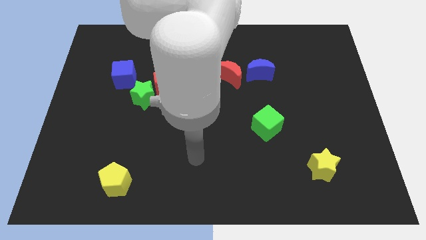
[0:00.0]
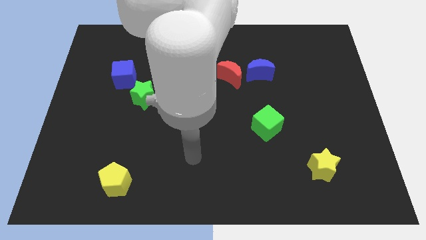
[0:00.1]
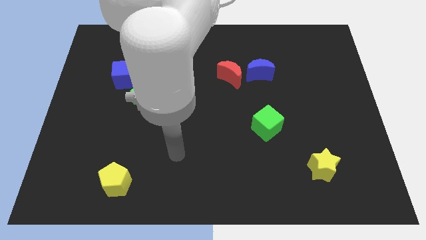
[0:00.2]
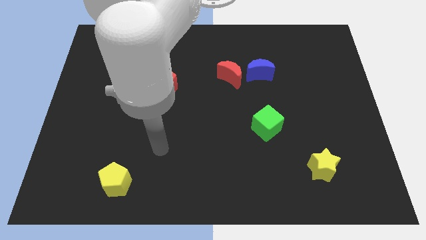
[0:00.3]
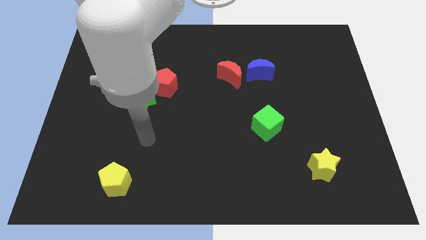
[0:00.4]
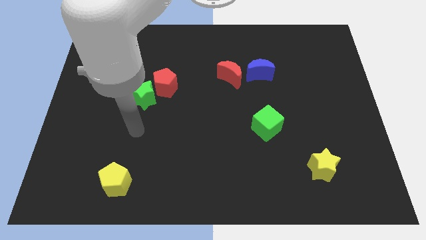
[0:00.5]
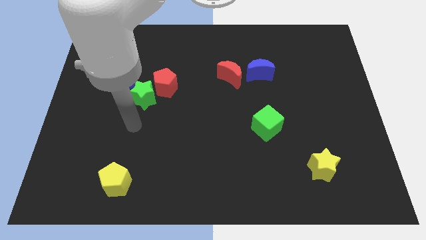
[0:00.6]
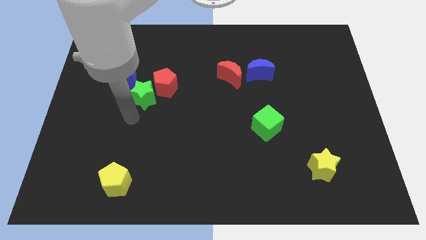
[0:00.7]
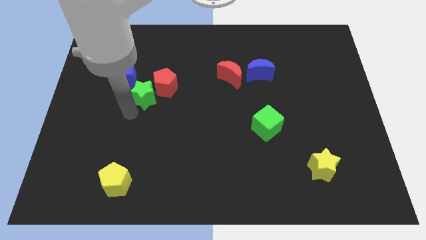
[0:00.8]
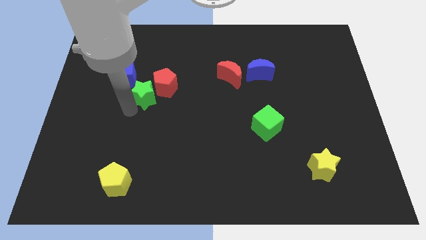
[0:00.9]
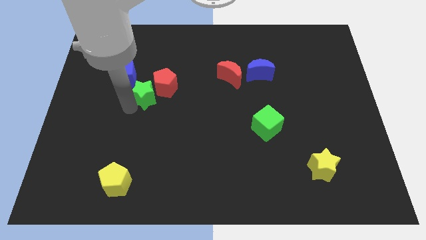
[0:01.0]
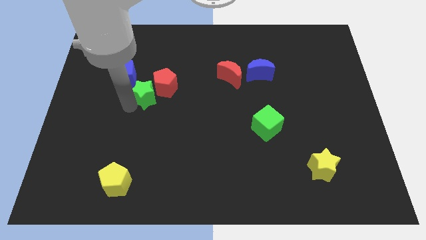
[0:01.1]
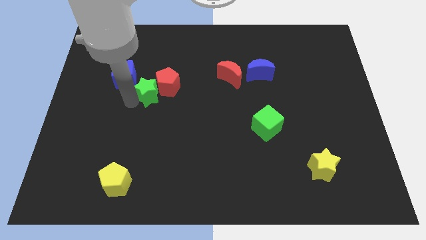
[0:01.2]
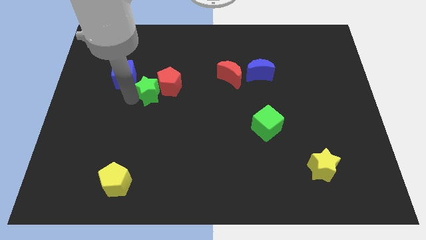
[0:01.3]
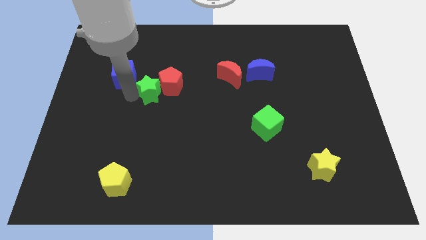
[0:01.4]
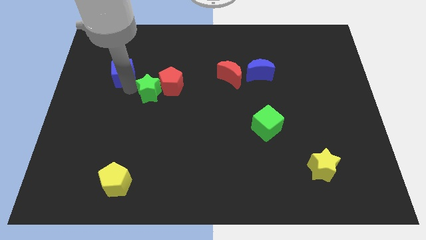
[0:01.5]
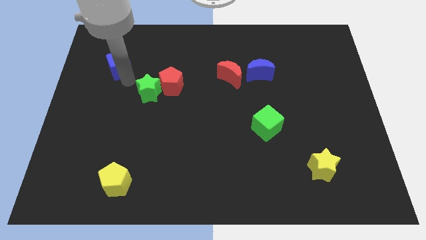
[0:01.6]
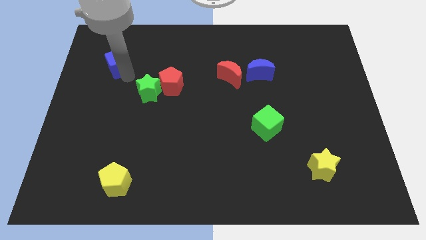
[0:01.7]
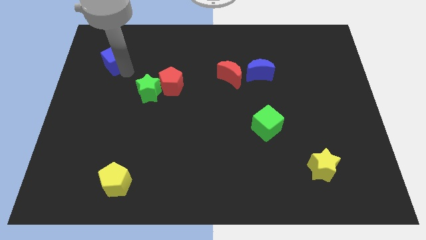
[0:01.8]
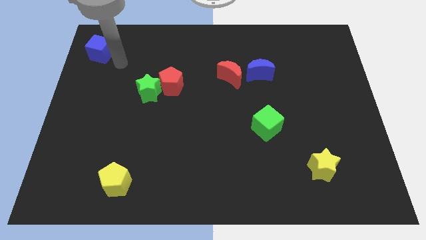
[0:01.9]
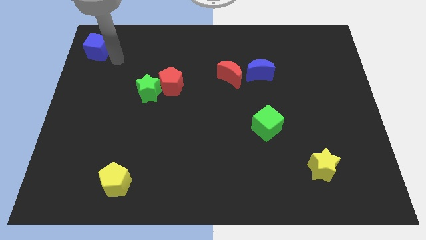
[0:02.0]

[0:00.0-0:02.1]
move the blue cube towards the top left side of the board

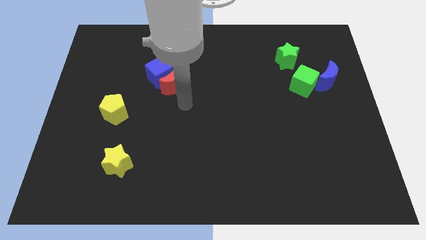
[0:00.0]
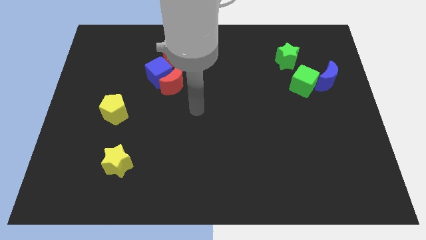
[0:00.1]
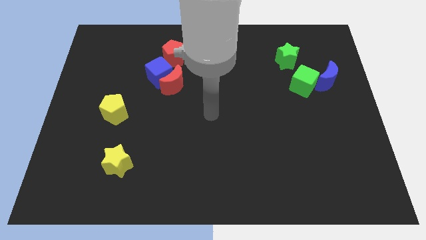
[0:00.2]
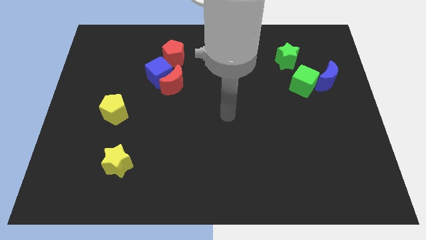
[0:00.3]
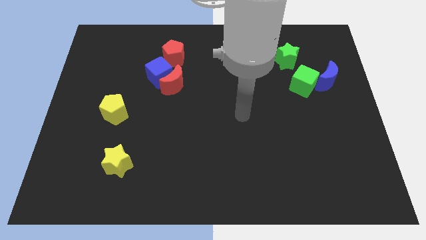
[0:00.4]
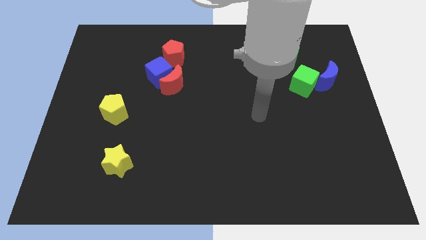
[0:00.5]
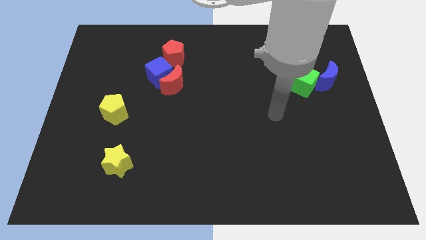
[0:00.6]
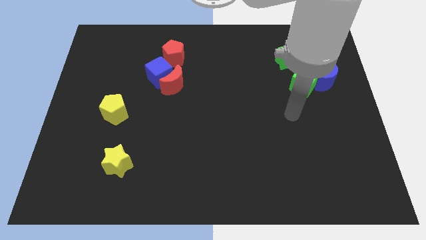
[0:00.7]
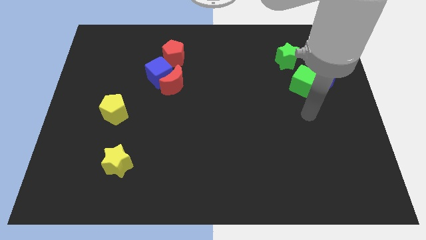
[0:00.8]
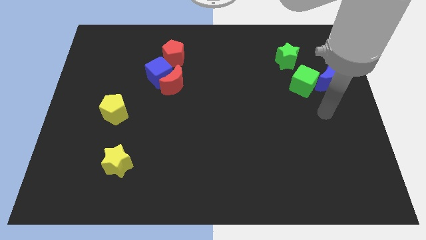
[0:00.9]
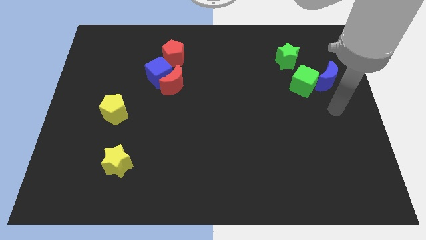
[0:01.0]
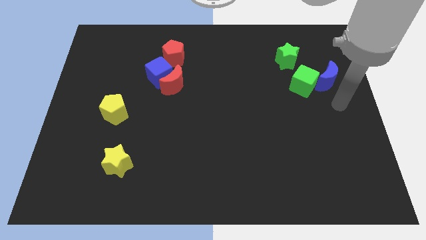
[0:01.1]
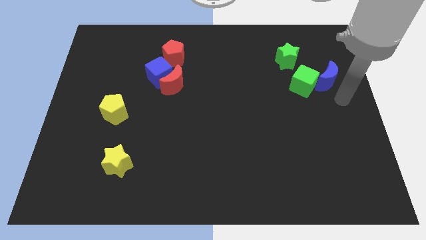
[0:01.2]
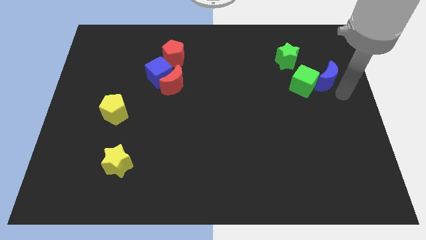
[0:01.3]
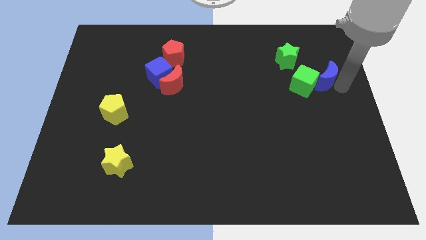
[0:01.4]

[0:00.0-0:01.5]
point at the right side of the blue moon

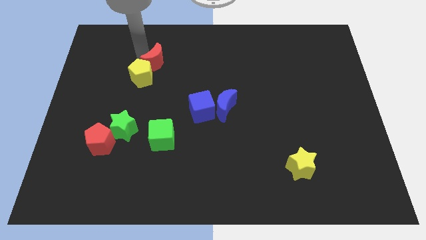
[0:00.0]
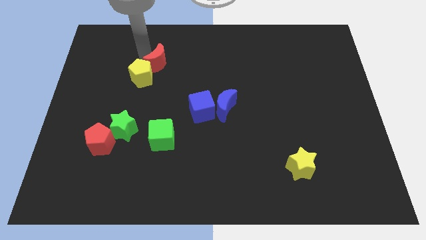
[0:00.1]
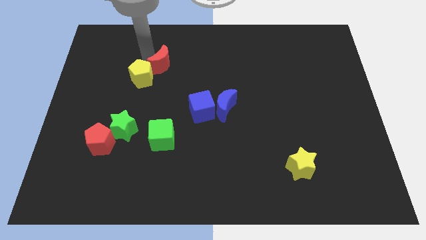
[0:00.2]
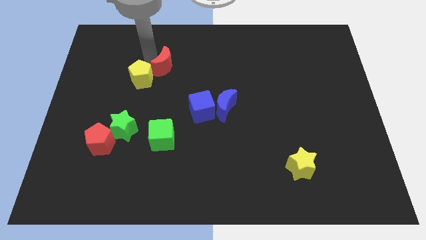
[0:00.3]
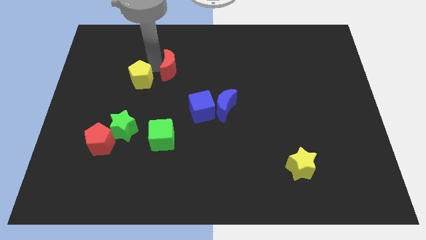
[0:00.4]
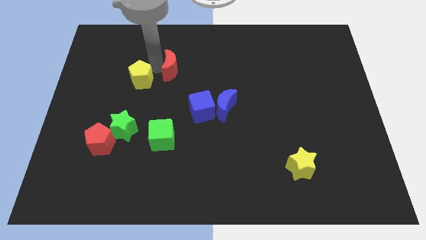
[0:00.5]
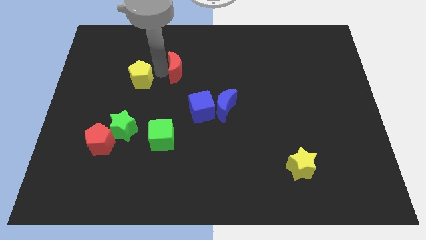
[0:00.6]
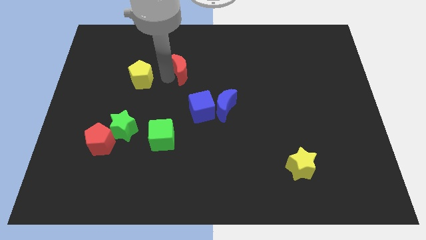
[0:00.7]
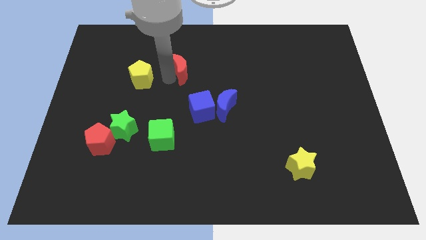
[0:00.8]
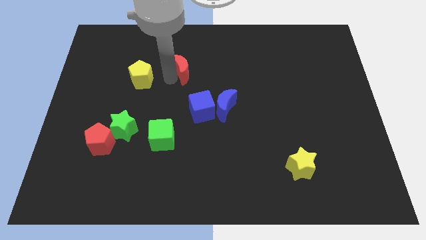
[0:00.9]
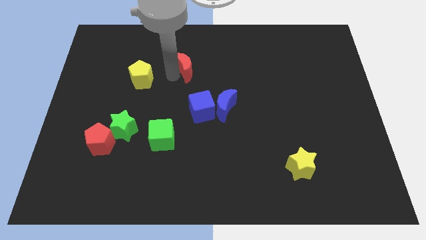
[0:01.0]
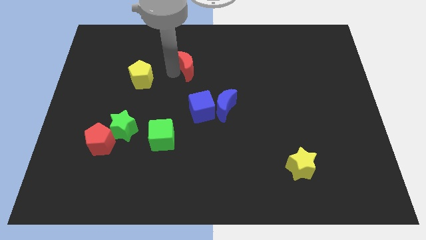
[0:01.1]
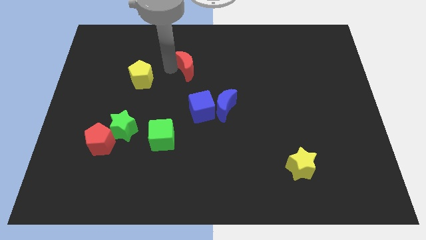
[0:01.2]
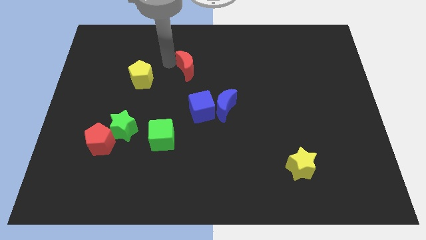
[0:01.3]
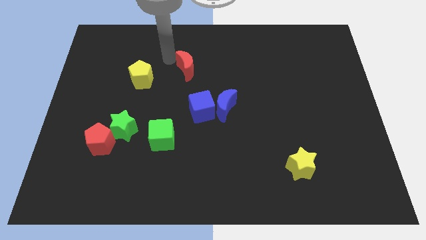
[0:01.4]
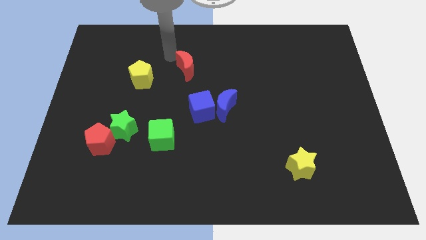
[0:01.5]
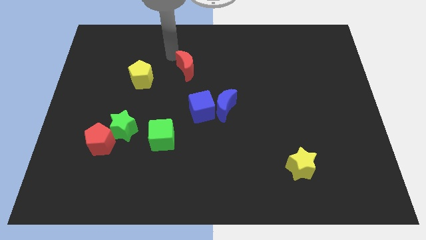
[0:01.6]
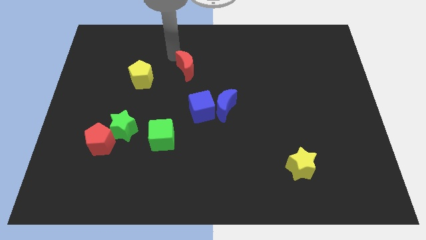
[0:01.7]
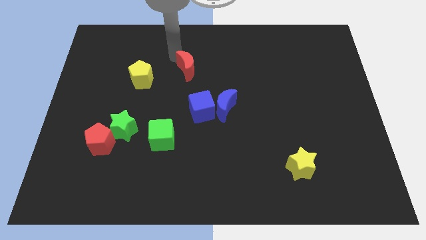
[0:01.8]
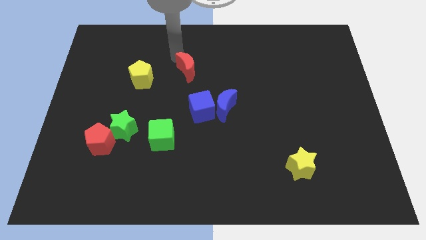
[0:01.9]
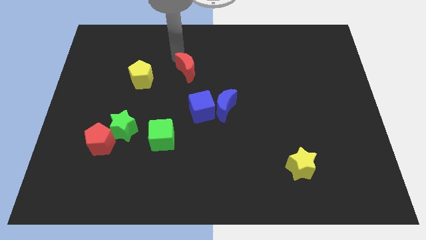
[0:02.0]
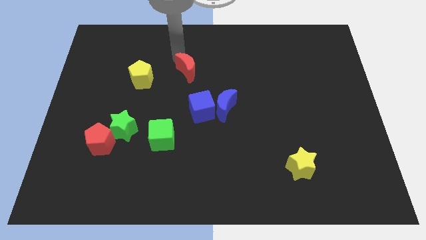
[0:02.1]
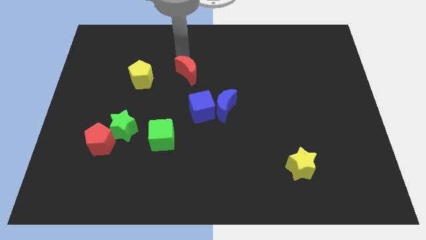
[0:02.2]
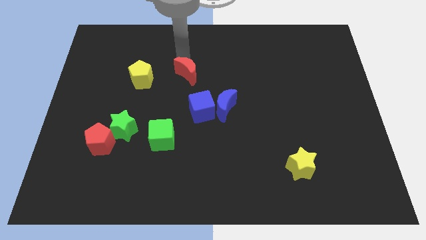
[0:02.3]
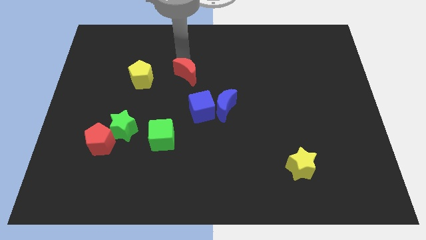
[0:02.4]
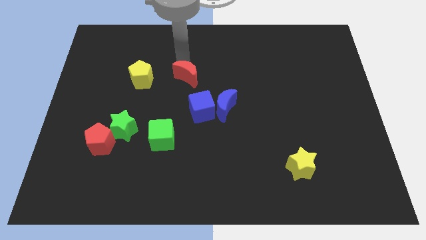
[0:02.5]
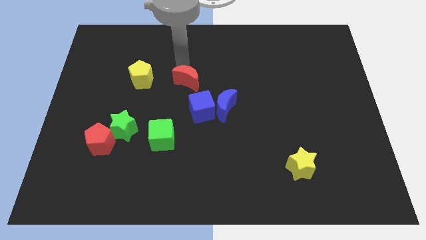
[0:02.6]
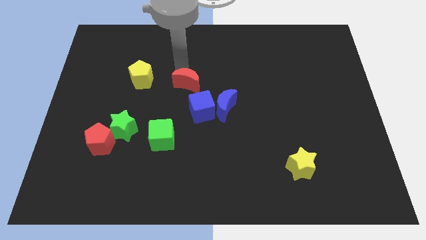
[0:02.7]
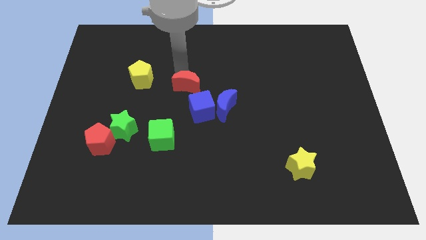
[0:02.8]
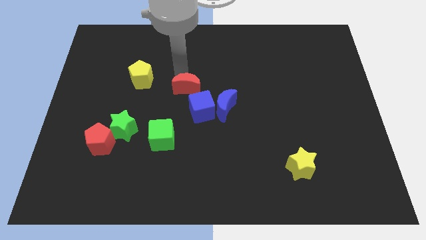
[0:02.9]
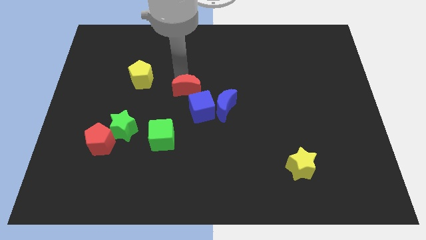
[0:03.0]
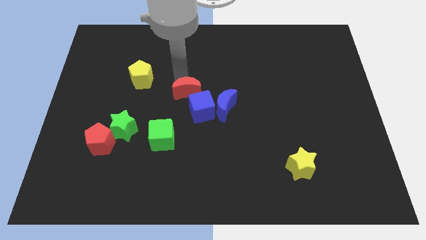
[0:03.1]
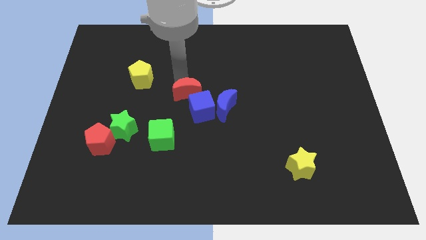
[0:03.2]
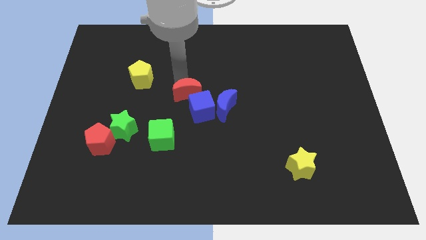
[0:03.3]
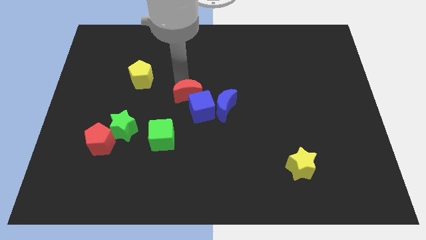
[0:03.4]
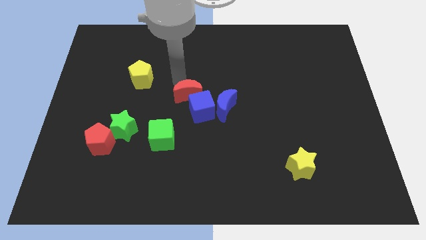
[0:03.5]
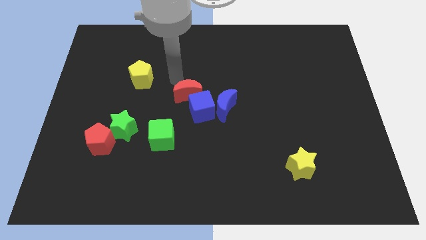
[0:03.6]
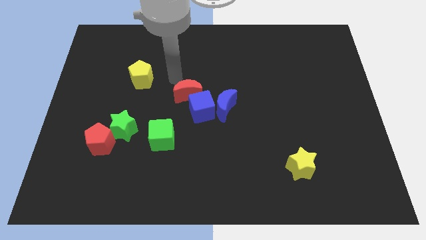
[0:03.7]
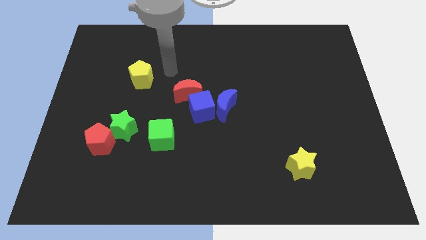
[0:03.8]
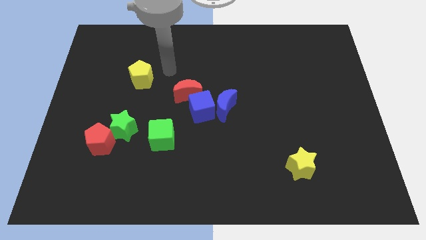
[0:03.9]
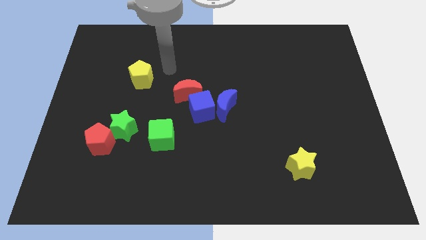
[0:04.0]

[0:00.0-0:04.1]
push red moon into blue cube

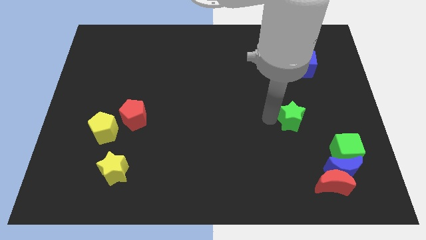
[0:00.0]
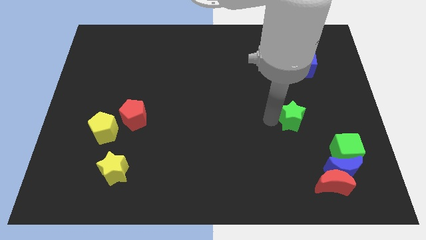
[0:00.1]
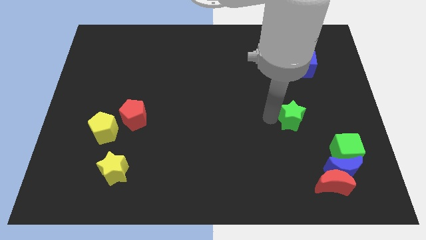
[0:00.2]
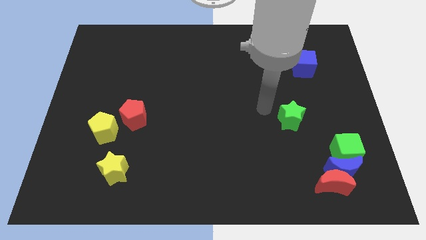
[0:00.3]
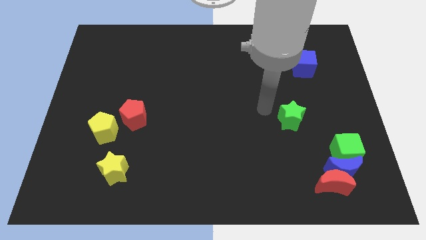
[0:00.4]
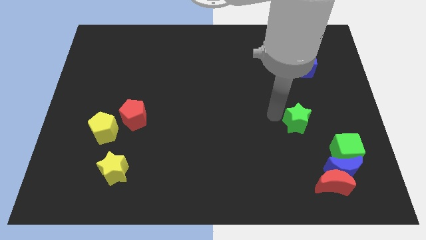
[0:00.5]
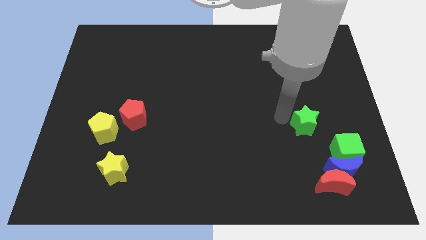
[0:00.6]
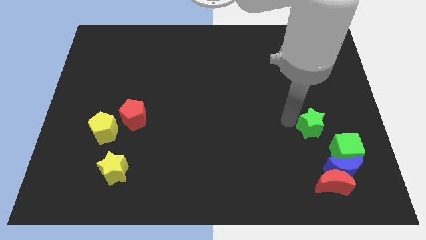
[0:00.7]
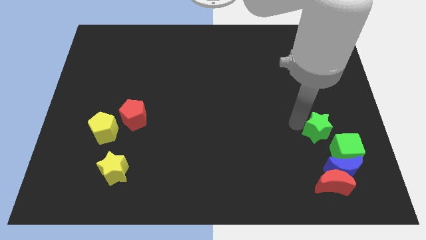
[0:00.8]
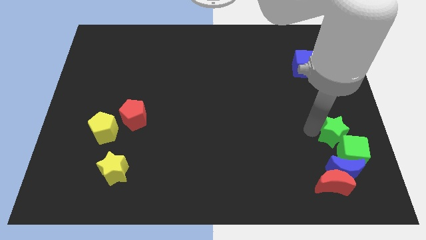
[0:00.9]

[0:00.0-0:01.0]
push the green star into the green cube

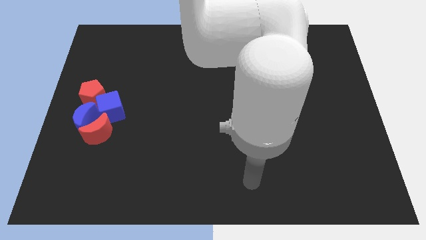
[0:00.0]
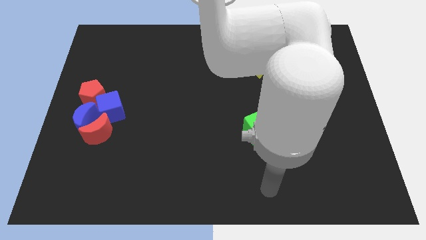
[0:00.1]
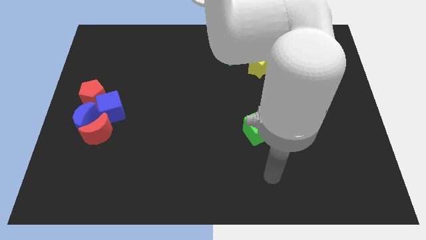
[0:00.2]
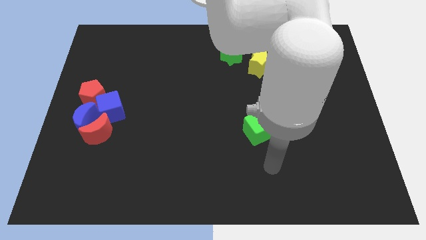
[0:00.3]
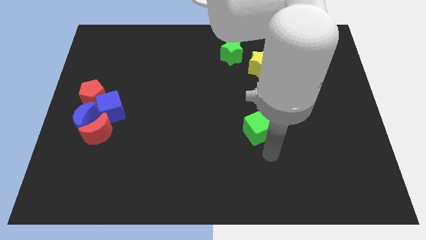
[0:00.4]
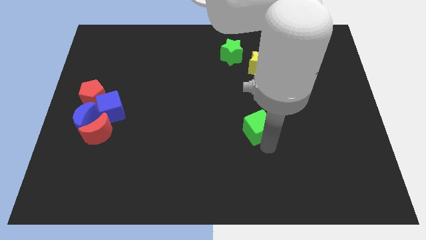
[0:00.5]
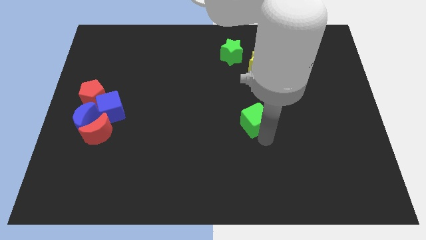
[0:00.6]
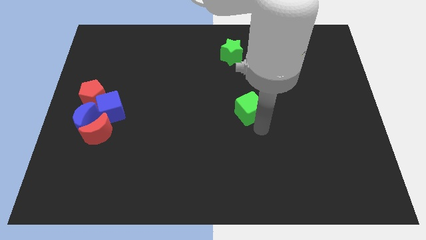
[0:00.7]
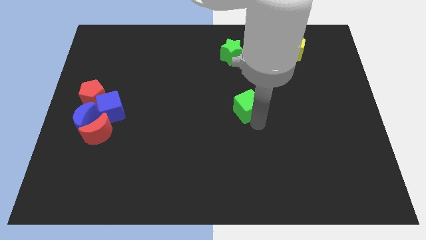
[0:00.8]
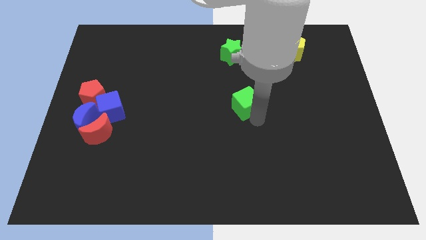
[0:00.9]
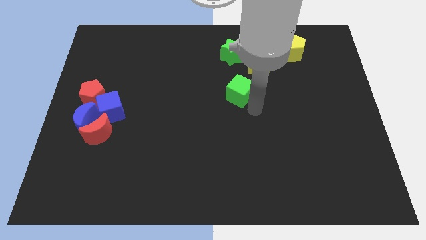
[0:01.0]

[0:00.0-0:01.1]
slide the green cube towards the bottom side of the green sar
